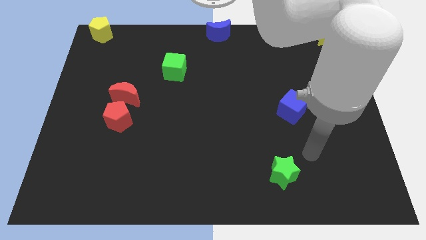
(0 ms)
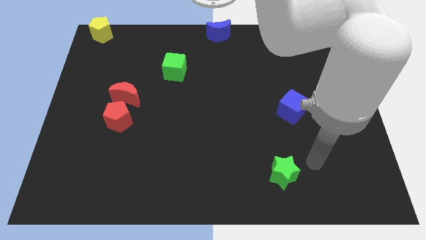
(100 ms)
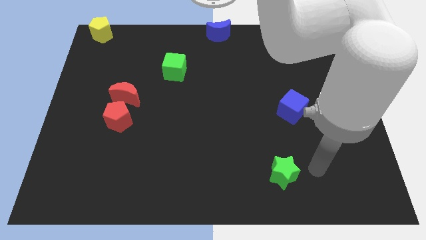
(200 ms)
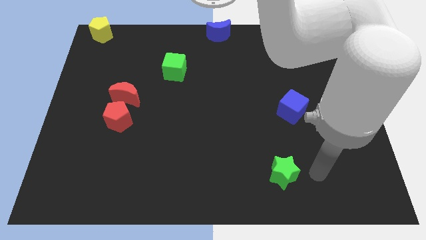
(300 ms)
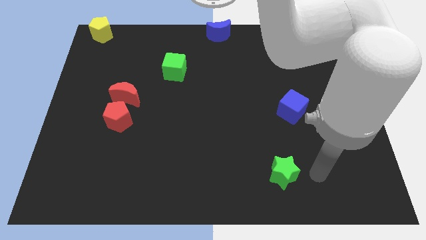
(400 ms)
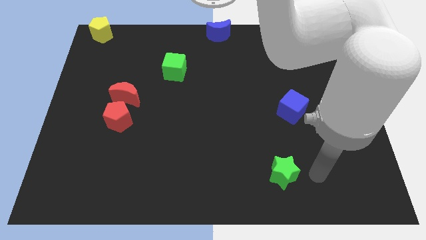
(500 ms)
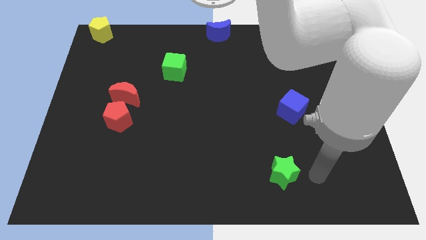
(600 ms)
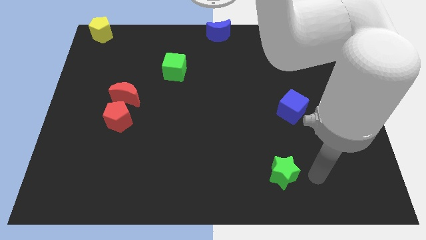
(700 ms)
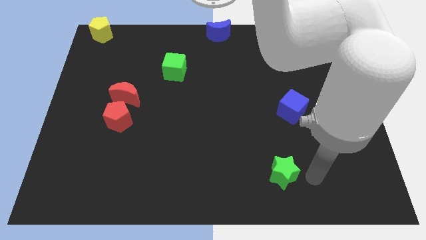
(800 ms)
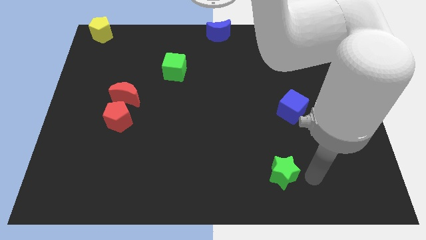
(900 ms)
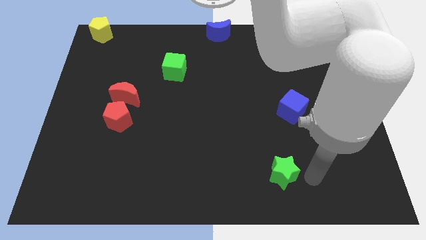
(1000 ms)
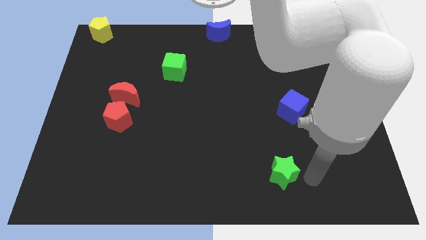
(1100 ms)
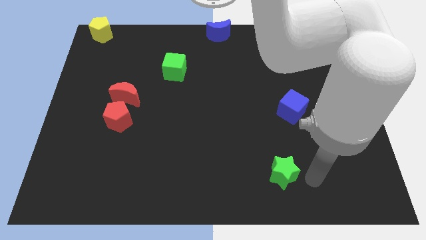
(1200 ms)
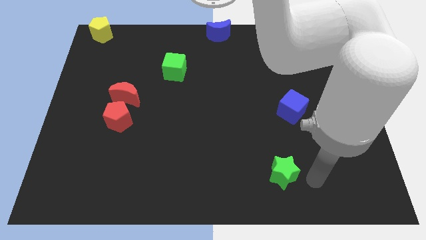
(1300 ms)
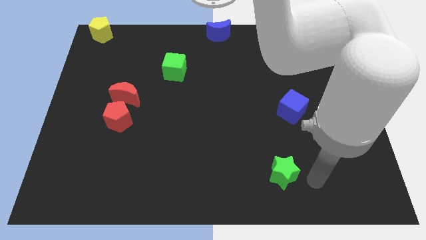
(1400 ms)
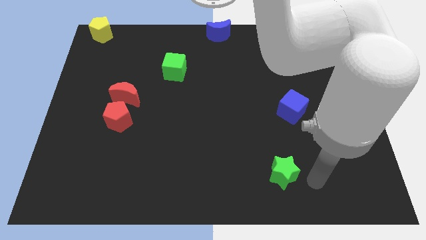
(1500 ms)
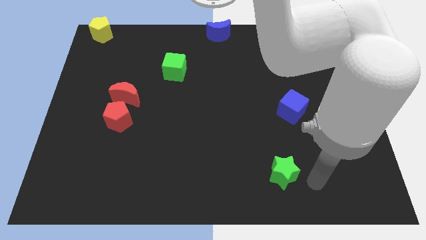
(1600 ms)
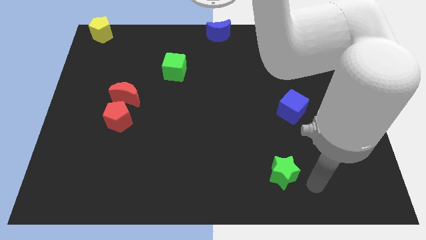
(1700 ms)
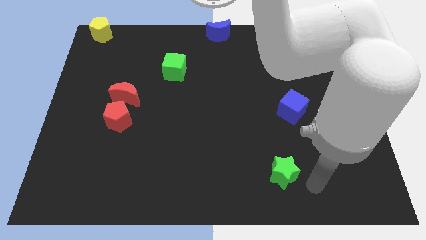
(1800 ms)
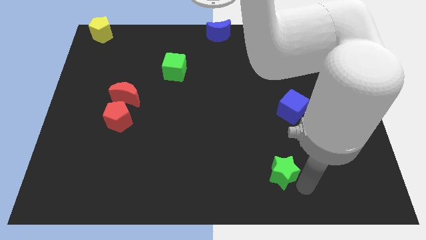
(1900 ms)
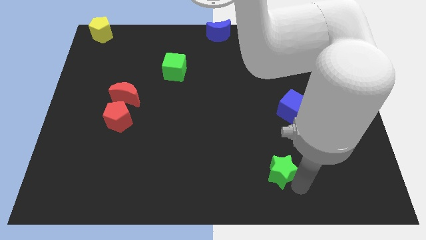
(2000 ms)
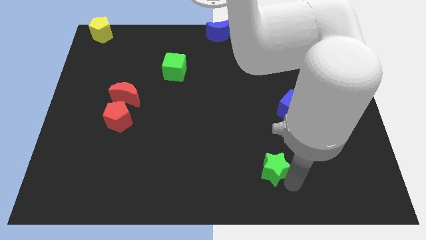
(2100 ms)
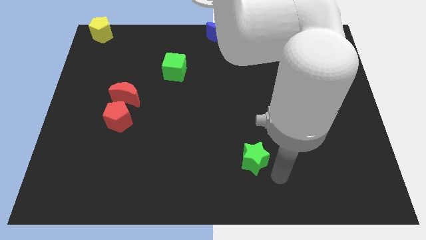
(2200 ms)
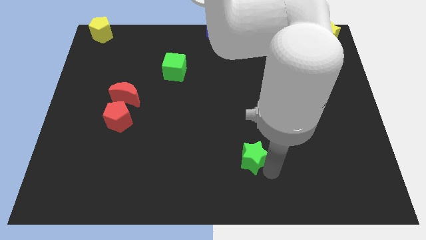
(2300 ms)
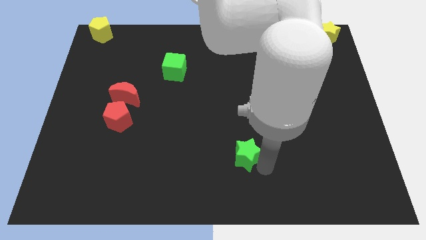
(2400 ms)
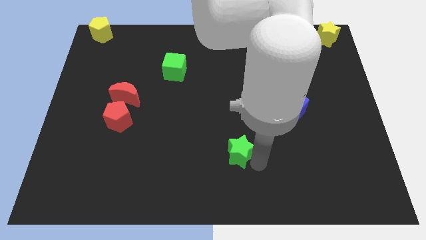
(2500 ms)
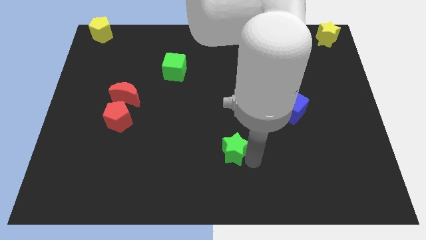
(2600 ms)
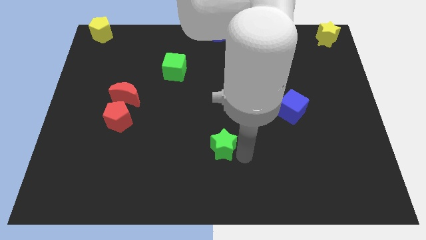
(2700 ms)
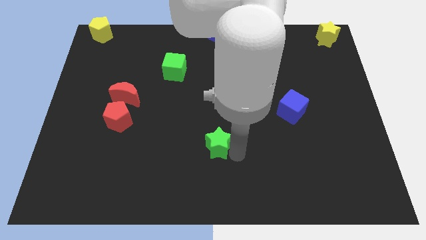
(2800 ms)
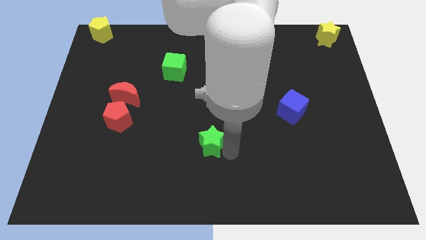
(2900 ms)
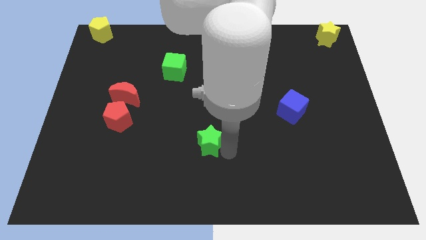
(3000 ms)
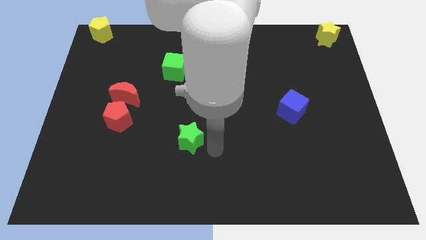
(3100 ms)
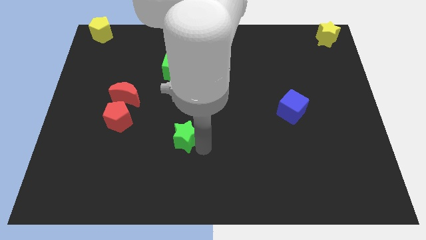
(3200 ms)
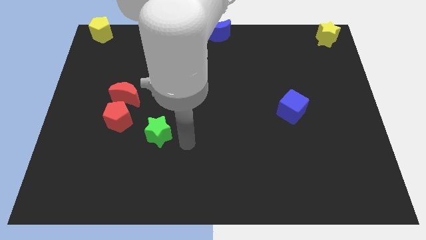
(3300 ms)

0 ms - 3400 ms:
push the green star to the bottom of the green cube

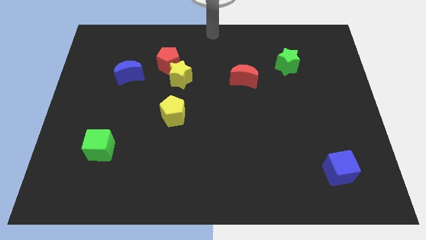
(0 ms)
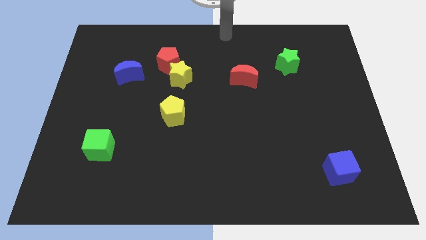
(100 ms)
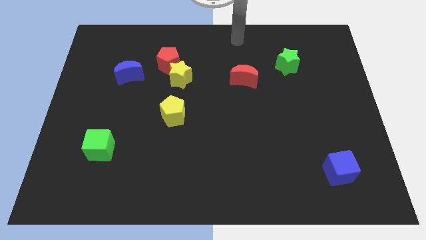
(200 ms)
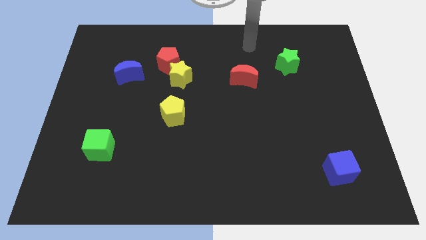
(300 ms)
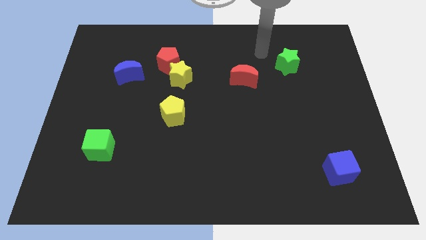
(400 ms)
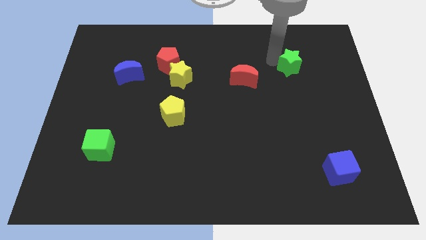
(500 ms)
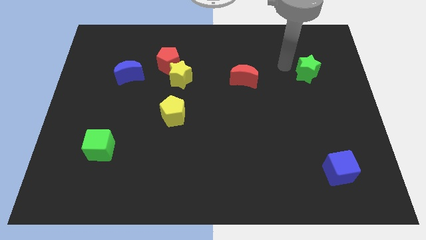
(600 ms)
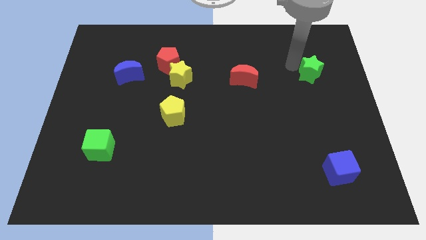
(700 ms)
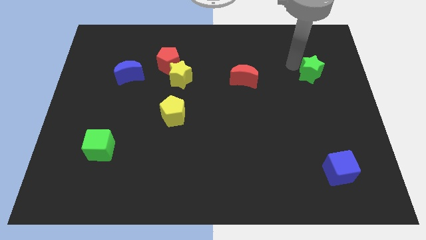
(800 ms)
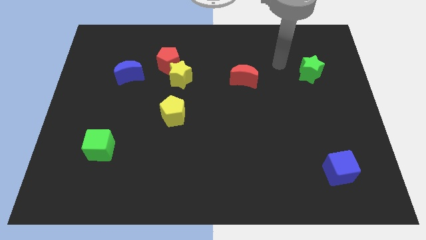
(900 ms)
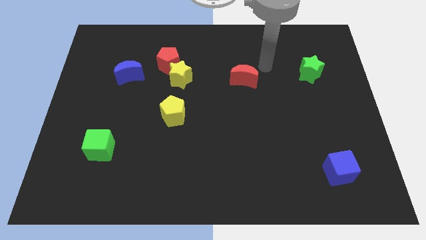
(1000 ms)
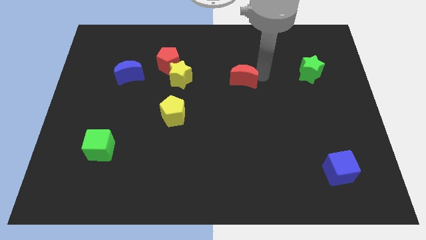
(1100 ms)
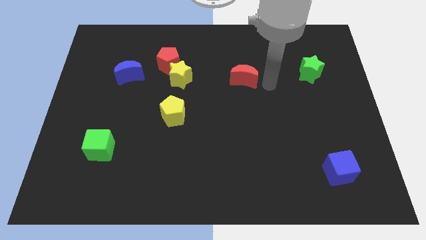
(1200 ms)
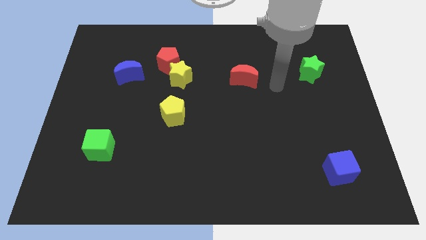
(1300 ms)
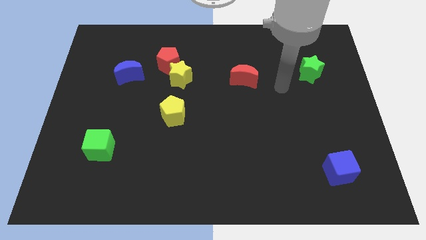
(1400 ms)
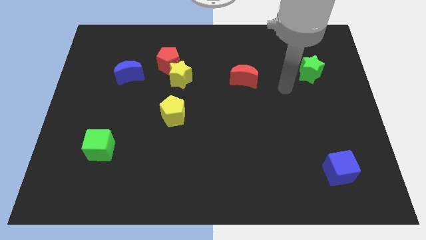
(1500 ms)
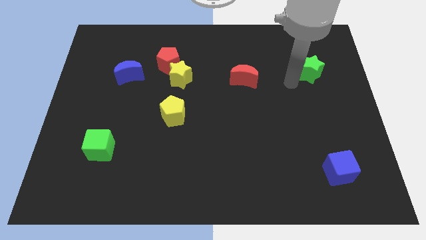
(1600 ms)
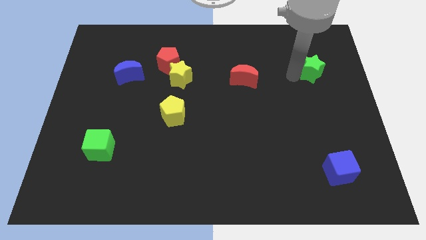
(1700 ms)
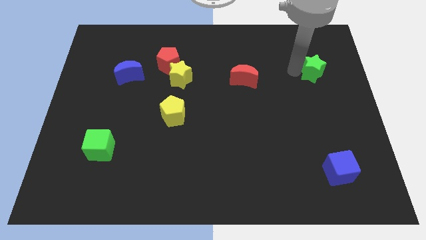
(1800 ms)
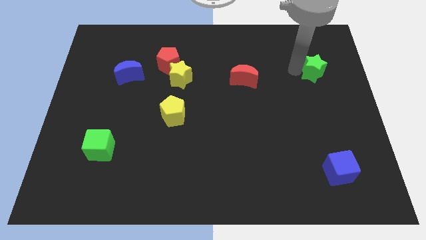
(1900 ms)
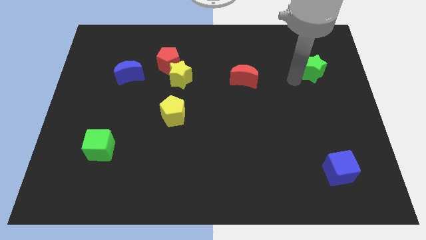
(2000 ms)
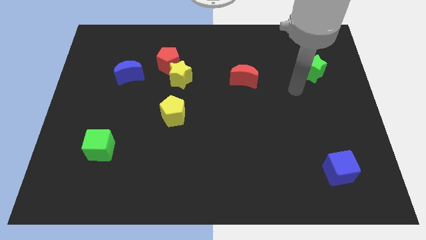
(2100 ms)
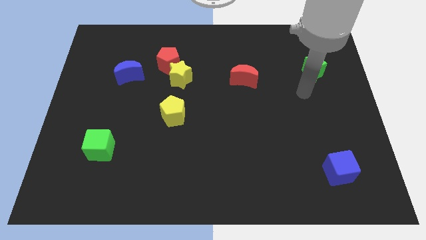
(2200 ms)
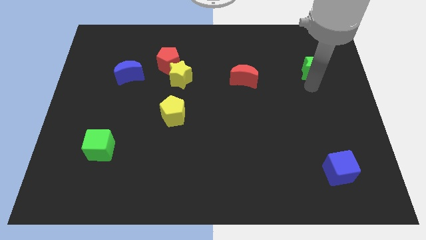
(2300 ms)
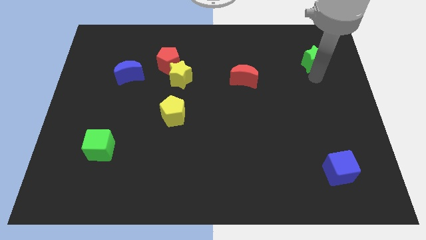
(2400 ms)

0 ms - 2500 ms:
slightly move the green star to right side of the board

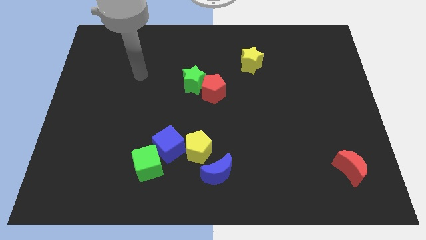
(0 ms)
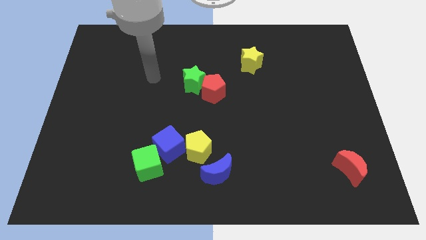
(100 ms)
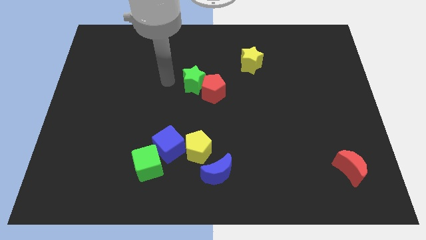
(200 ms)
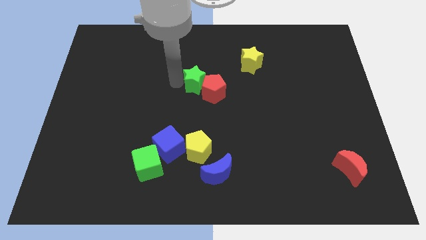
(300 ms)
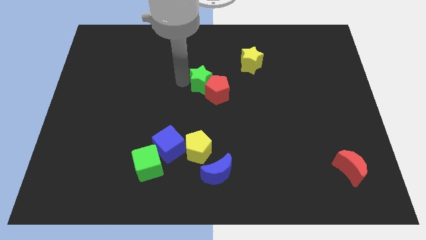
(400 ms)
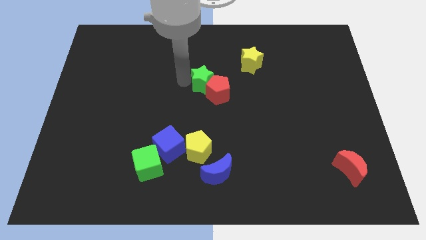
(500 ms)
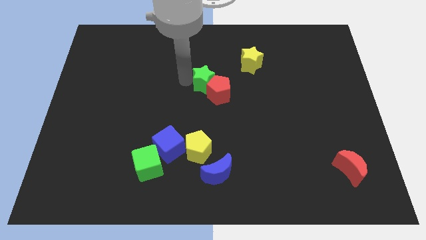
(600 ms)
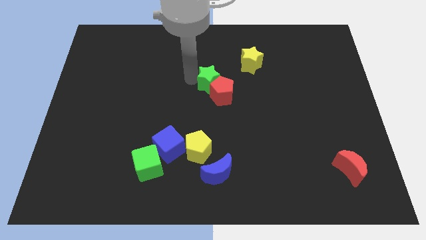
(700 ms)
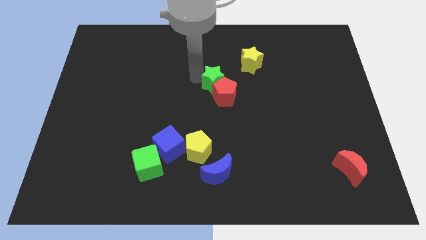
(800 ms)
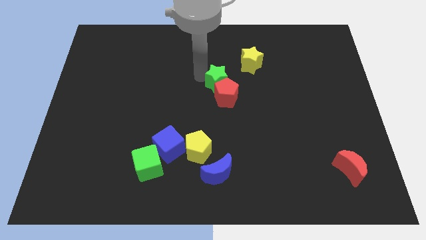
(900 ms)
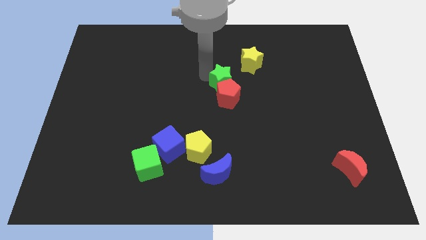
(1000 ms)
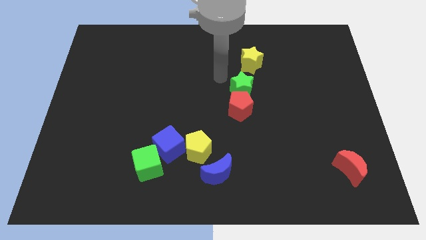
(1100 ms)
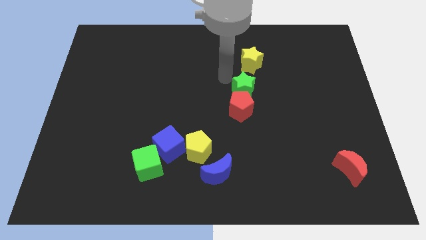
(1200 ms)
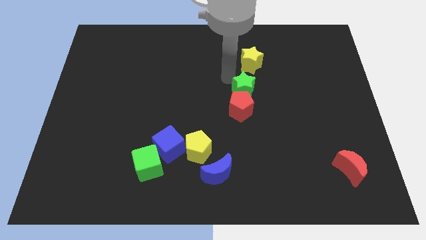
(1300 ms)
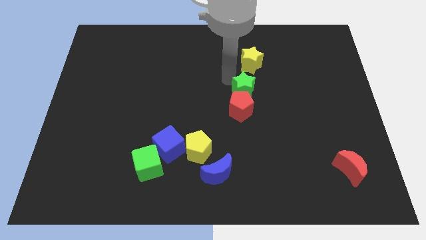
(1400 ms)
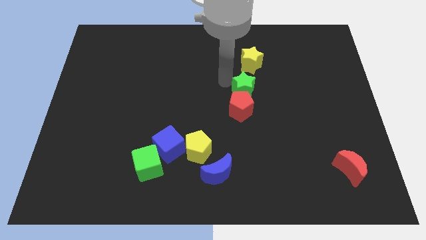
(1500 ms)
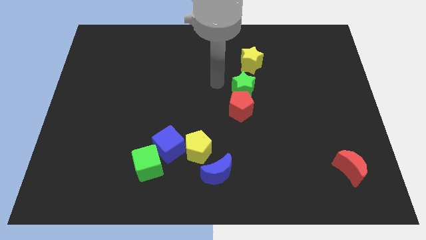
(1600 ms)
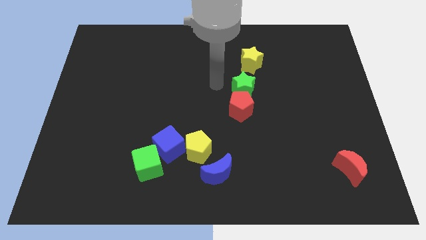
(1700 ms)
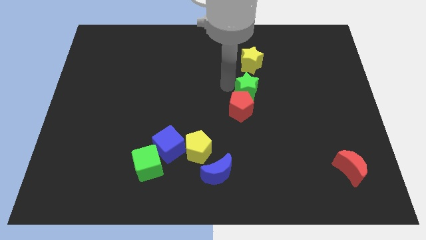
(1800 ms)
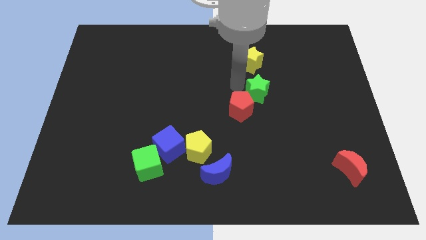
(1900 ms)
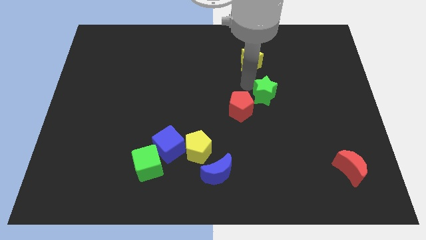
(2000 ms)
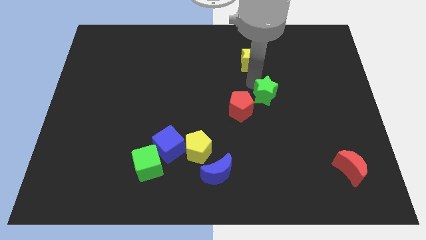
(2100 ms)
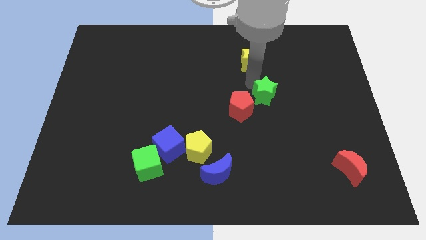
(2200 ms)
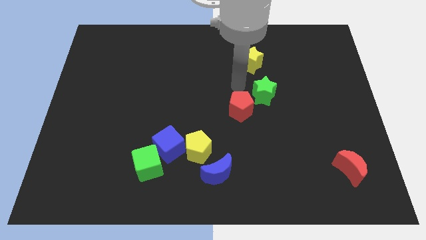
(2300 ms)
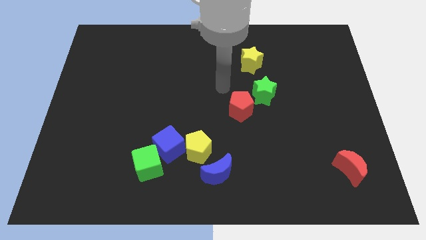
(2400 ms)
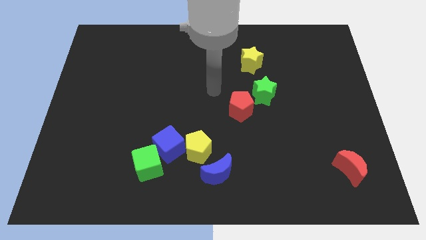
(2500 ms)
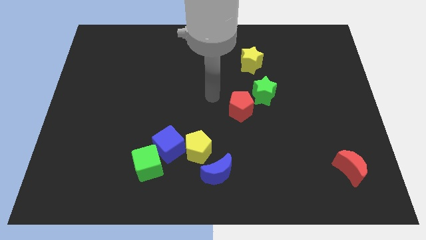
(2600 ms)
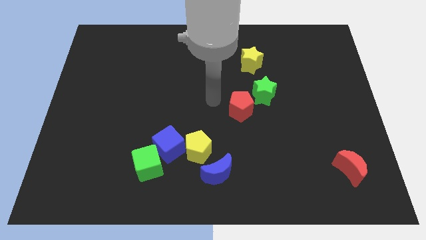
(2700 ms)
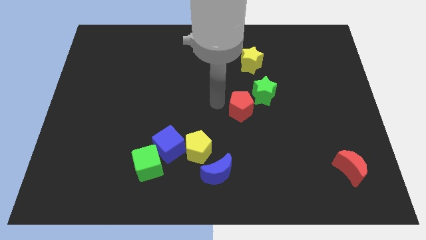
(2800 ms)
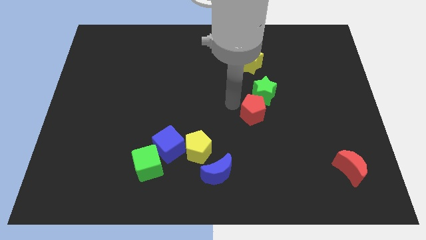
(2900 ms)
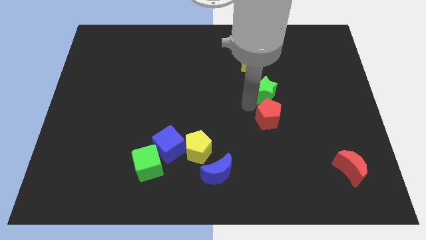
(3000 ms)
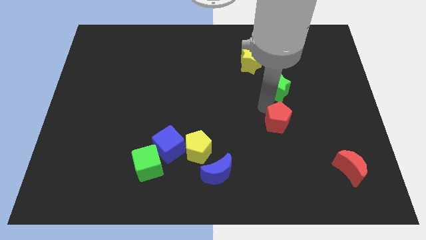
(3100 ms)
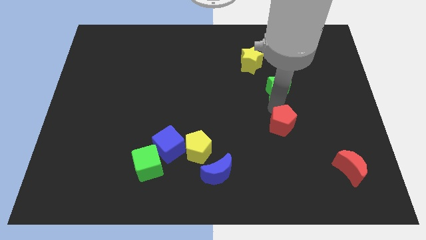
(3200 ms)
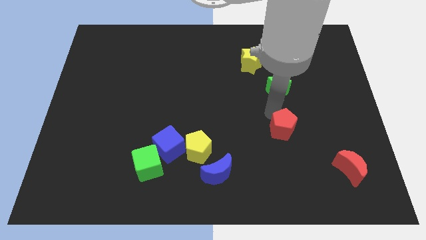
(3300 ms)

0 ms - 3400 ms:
move the green star and the red pentagon to the right side
